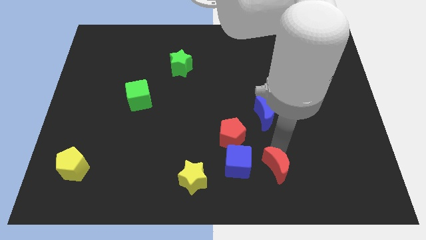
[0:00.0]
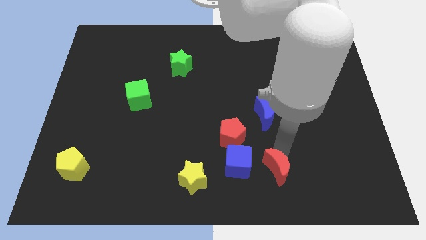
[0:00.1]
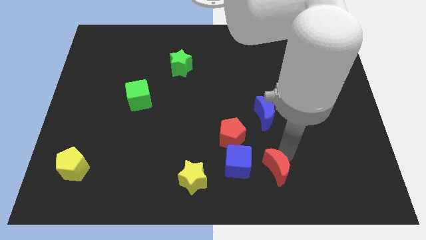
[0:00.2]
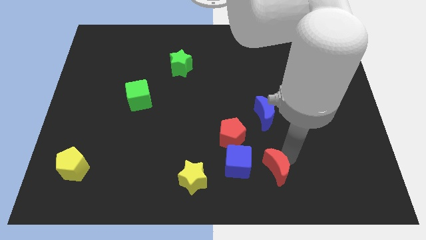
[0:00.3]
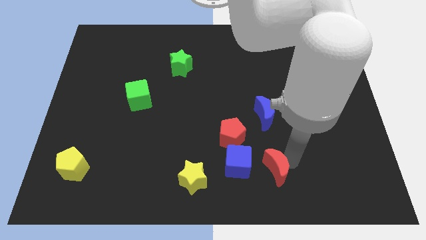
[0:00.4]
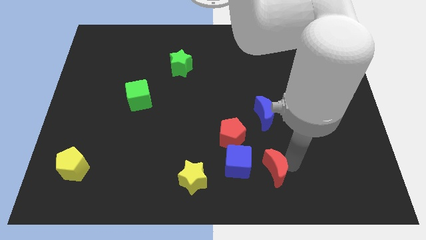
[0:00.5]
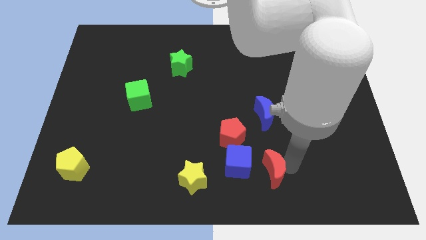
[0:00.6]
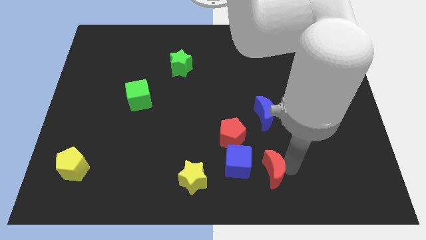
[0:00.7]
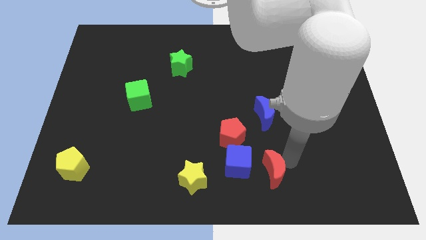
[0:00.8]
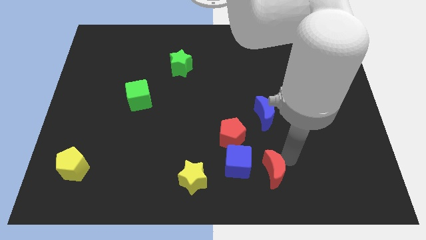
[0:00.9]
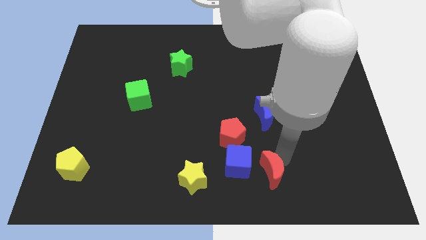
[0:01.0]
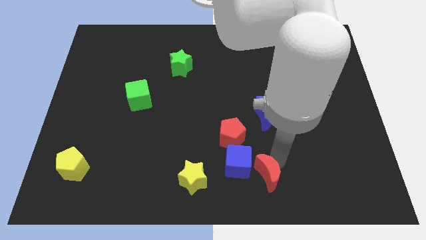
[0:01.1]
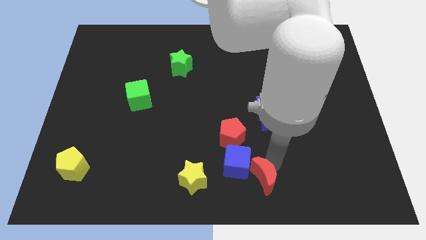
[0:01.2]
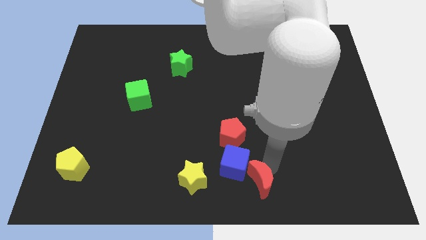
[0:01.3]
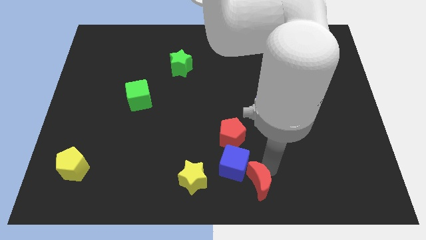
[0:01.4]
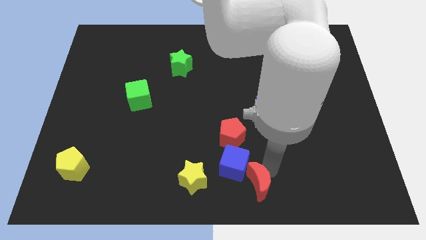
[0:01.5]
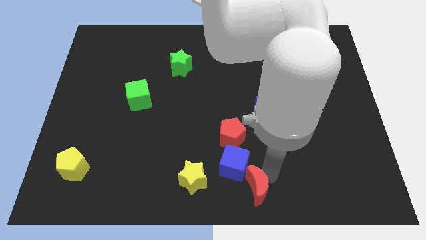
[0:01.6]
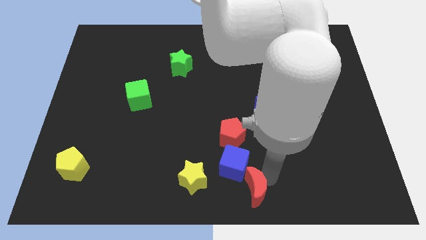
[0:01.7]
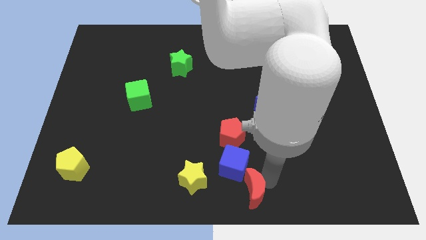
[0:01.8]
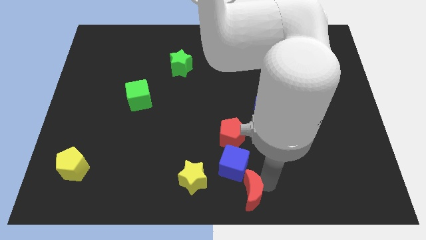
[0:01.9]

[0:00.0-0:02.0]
push red moon into the blue block

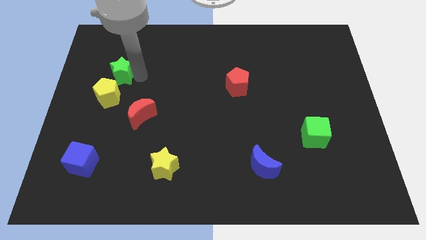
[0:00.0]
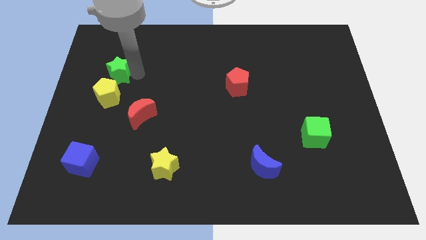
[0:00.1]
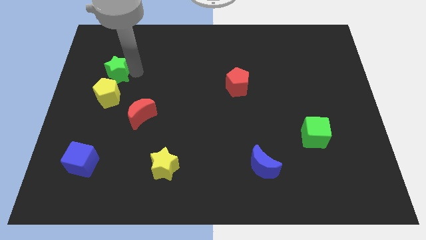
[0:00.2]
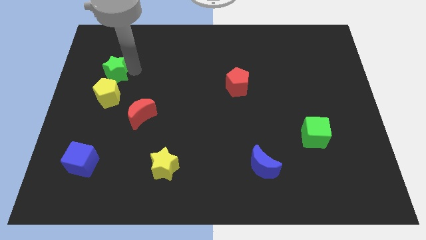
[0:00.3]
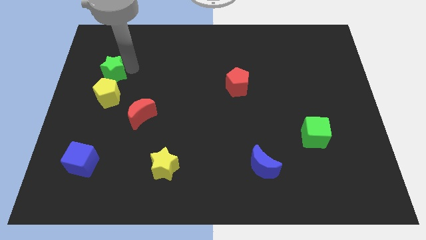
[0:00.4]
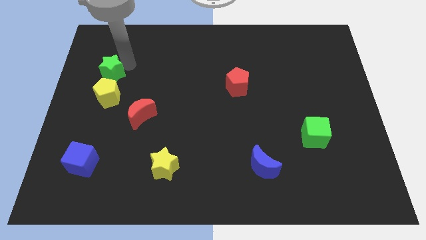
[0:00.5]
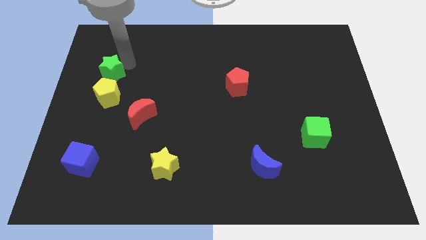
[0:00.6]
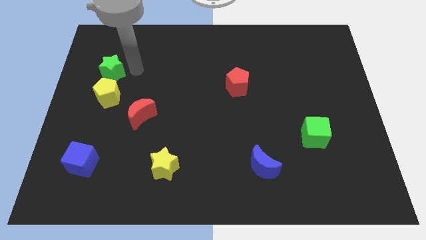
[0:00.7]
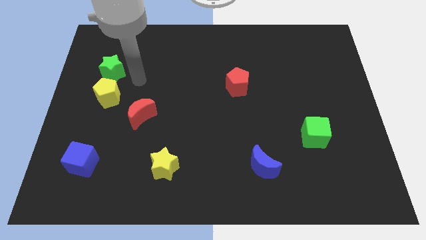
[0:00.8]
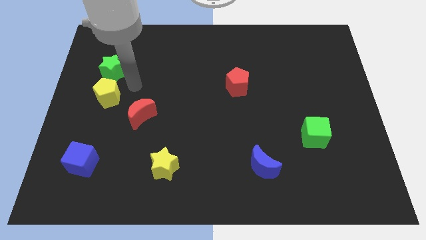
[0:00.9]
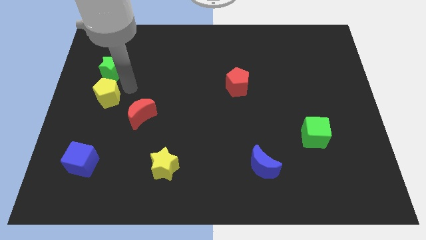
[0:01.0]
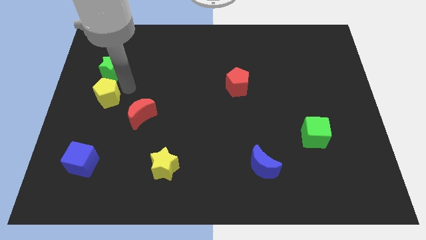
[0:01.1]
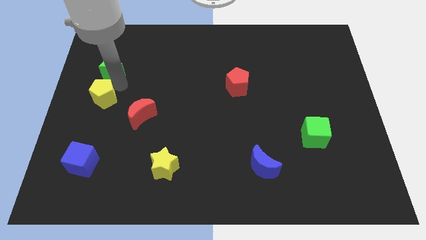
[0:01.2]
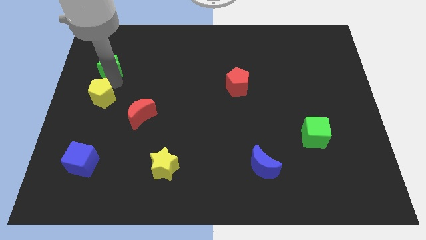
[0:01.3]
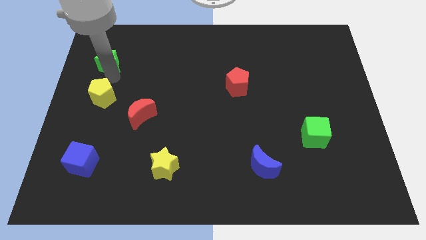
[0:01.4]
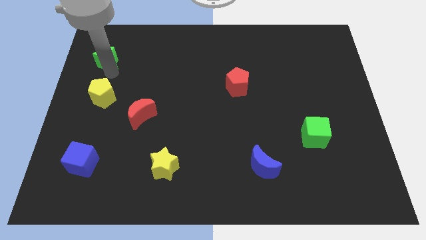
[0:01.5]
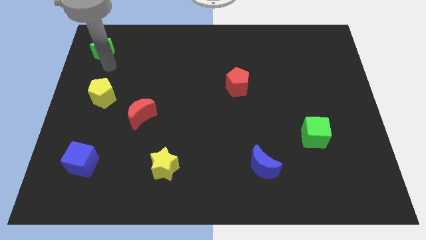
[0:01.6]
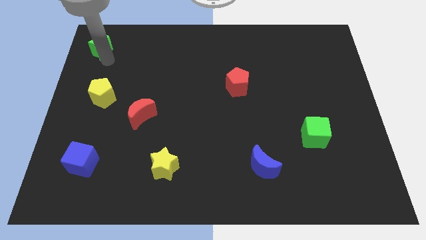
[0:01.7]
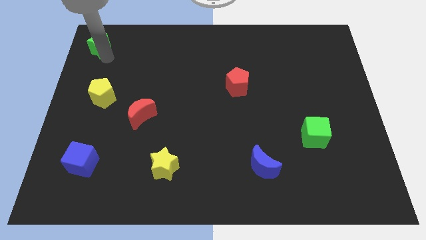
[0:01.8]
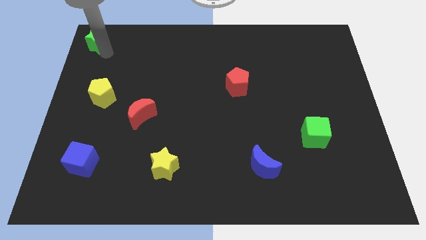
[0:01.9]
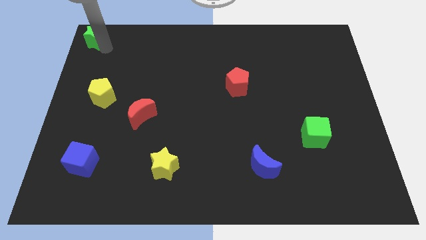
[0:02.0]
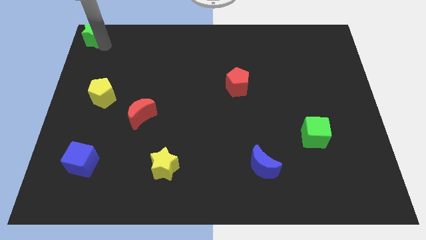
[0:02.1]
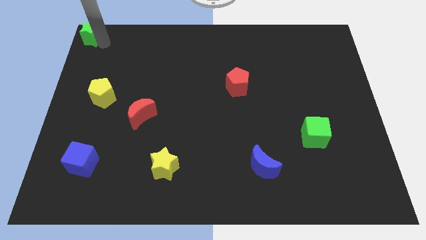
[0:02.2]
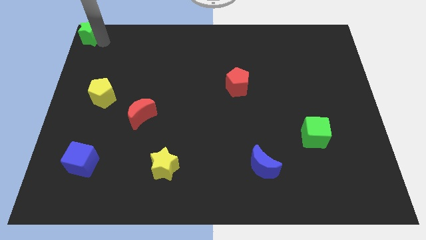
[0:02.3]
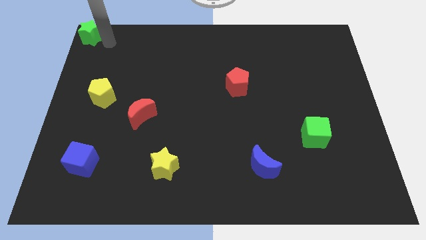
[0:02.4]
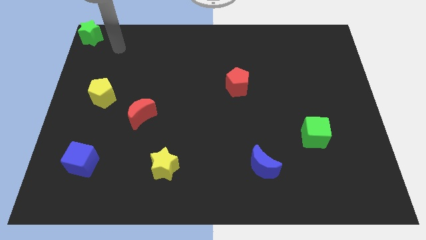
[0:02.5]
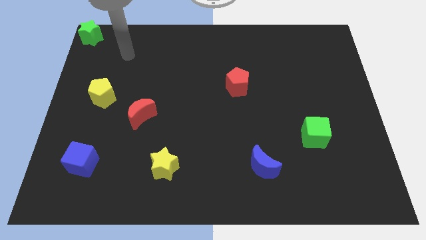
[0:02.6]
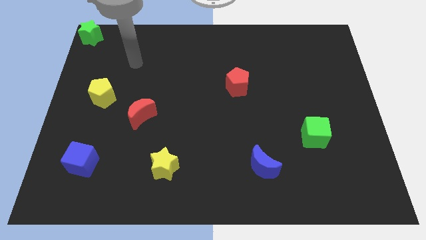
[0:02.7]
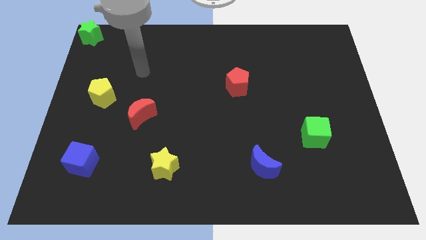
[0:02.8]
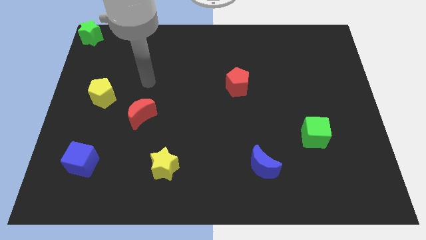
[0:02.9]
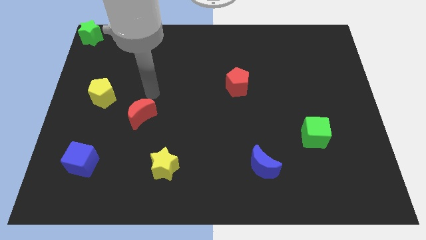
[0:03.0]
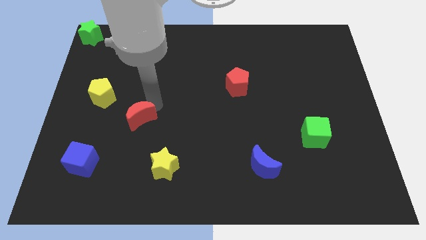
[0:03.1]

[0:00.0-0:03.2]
take the green star away from the yellow pentagon

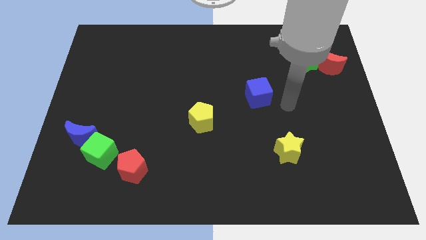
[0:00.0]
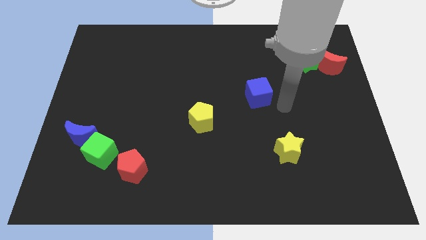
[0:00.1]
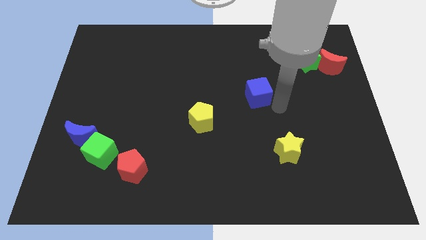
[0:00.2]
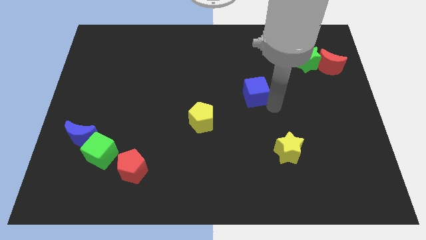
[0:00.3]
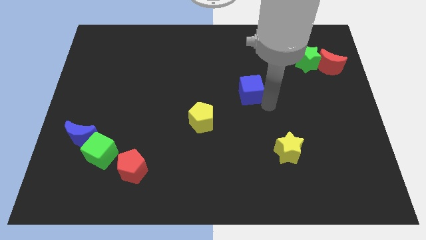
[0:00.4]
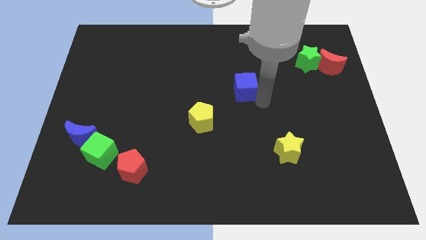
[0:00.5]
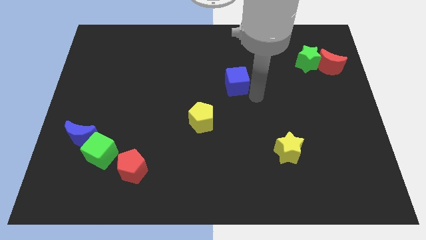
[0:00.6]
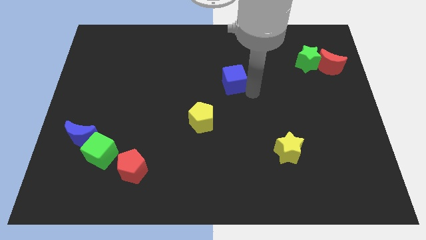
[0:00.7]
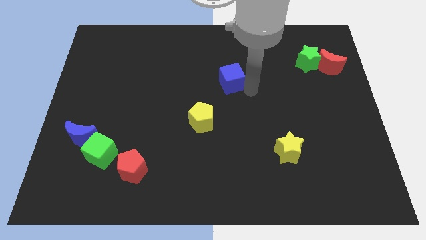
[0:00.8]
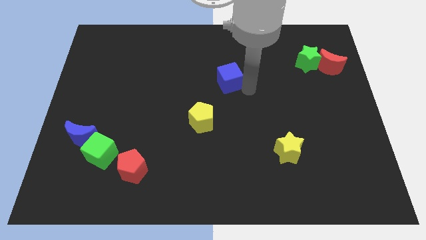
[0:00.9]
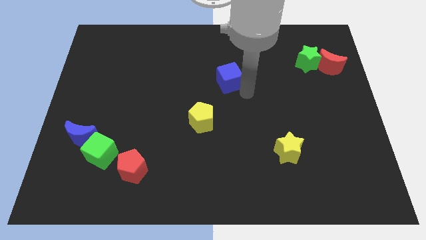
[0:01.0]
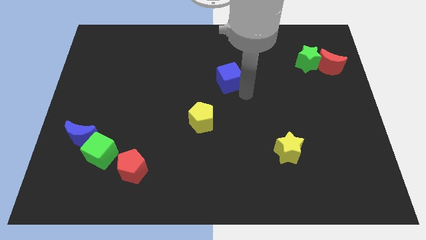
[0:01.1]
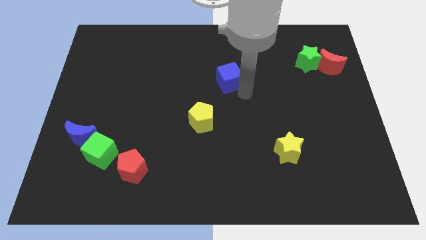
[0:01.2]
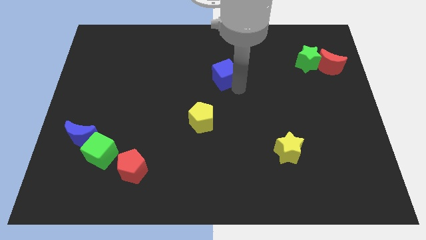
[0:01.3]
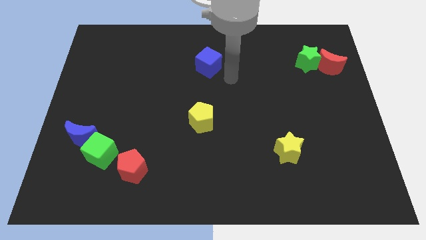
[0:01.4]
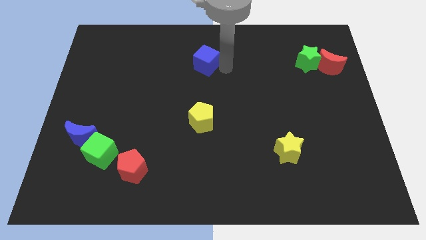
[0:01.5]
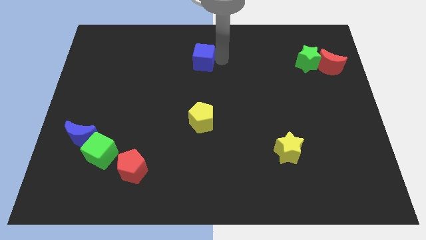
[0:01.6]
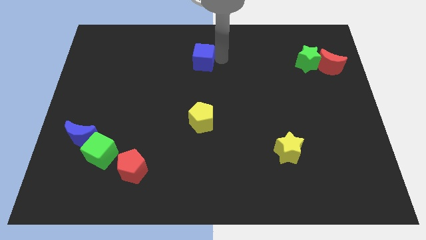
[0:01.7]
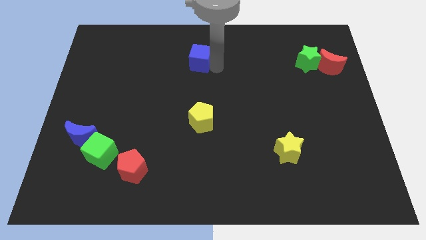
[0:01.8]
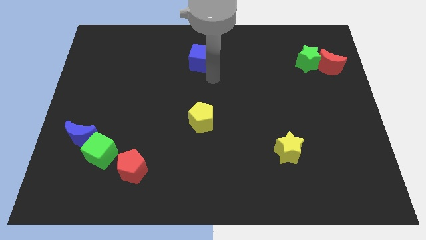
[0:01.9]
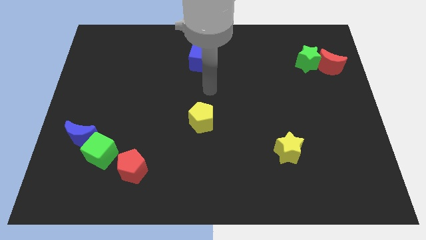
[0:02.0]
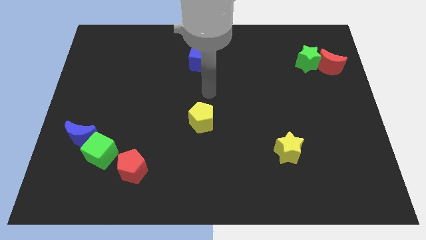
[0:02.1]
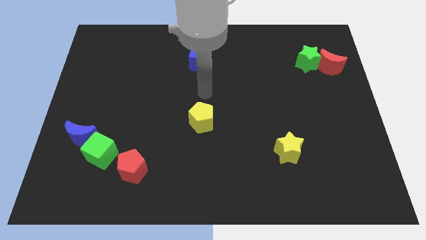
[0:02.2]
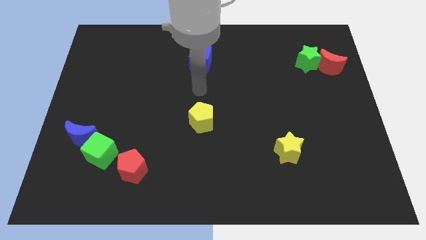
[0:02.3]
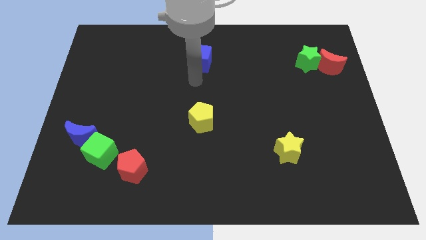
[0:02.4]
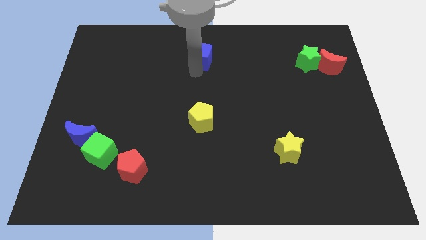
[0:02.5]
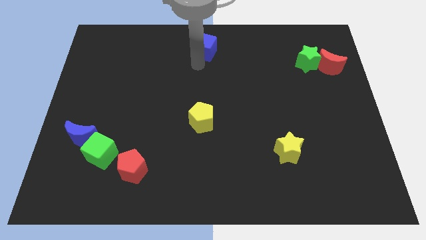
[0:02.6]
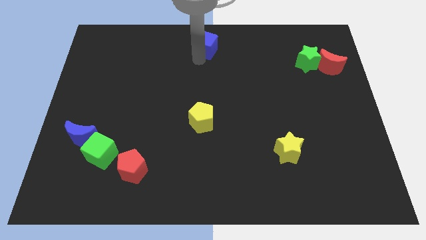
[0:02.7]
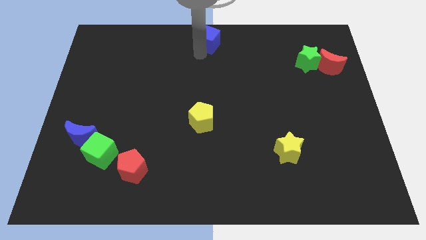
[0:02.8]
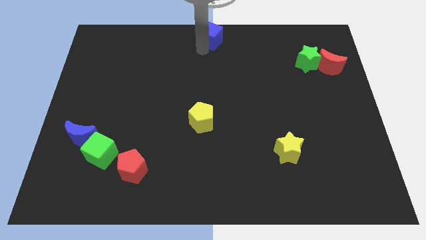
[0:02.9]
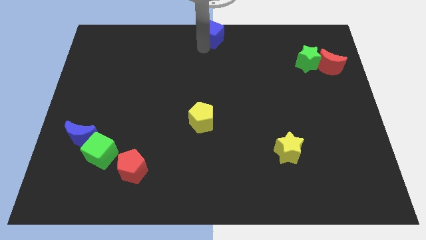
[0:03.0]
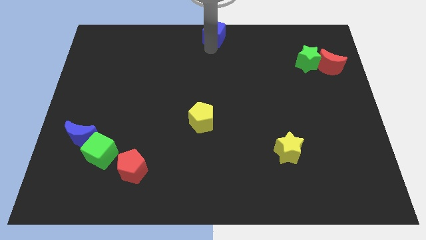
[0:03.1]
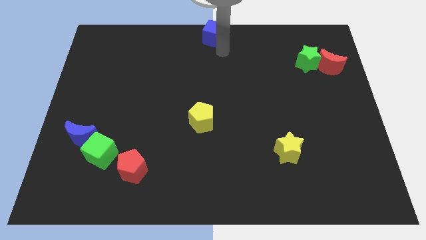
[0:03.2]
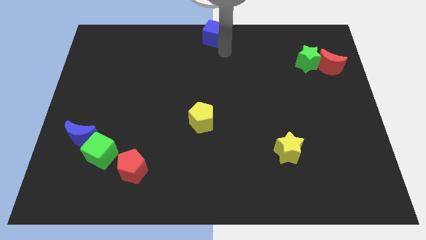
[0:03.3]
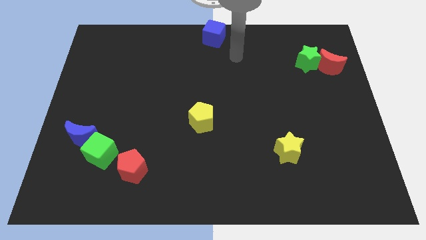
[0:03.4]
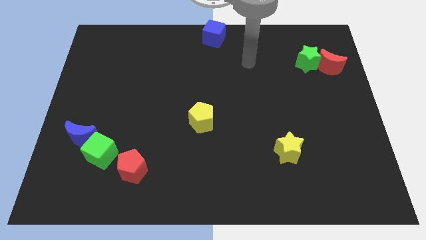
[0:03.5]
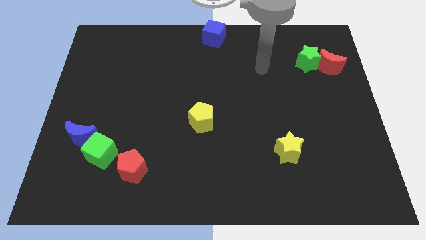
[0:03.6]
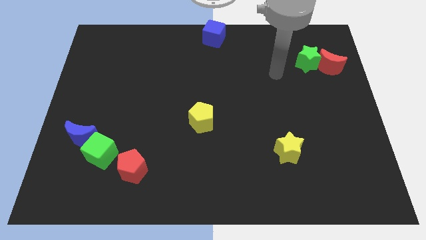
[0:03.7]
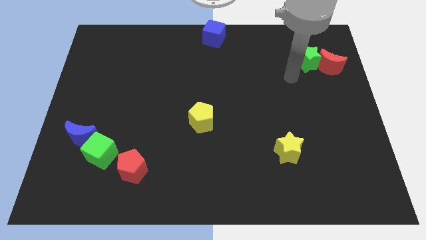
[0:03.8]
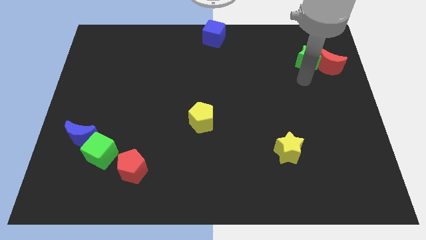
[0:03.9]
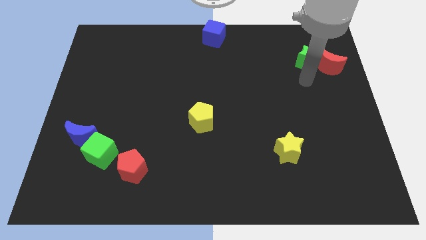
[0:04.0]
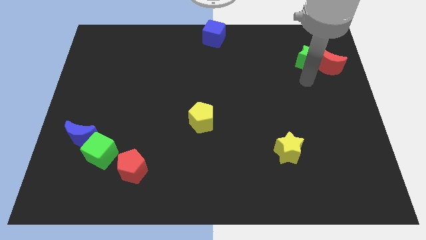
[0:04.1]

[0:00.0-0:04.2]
push the blue cube towards the top center of the board
